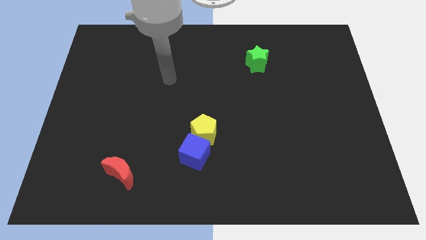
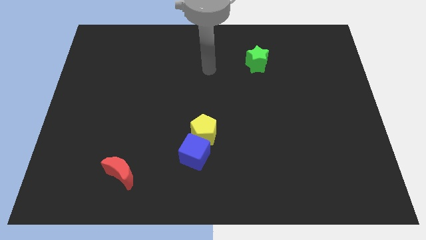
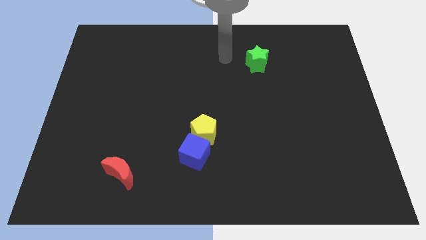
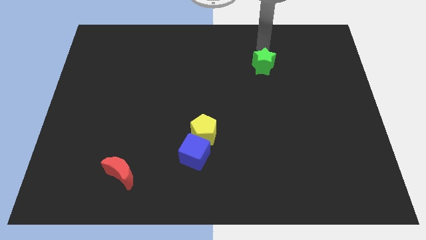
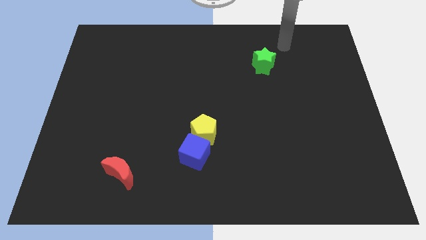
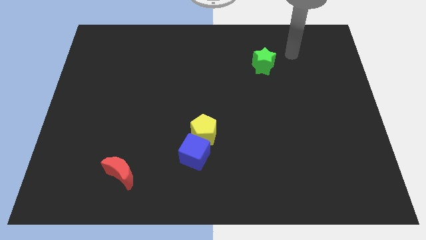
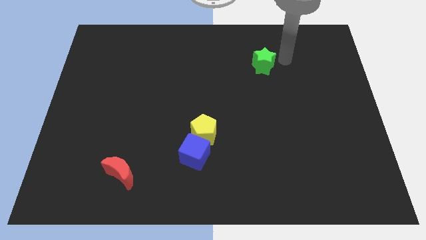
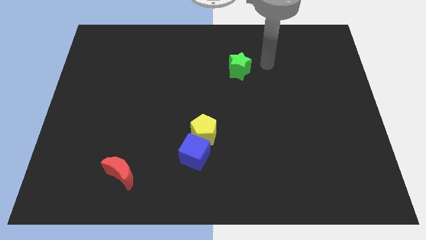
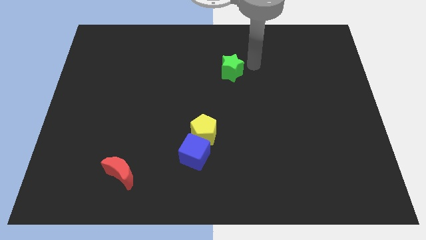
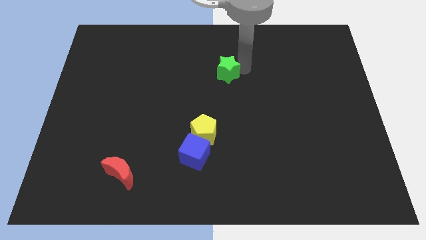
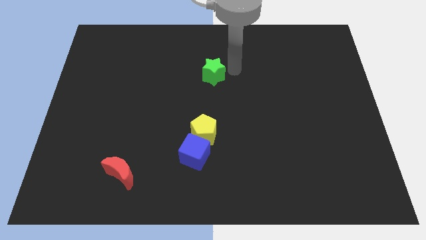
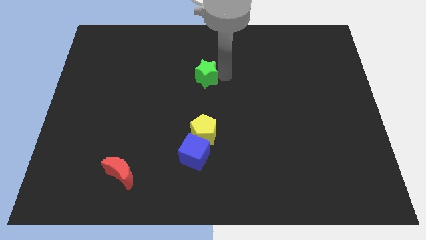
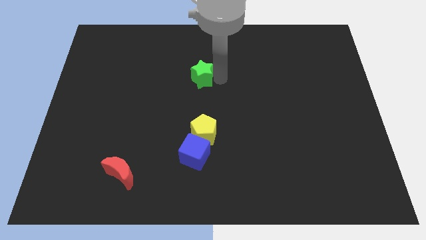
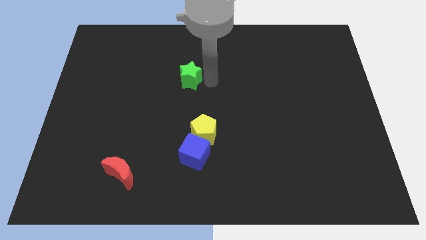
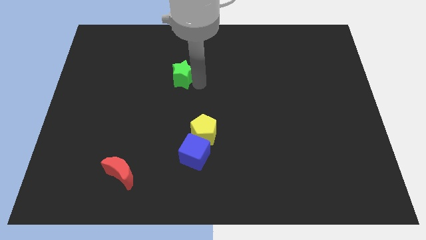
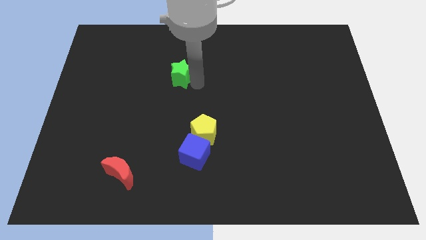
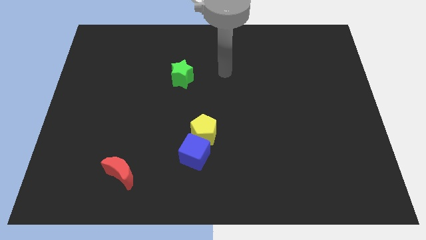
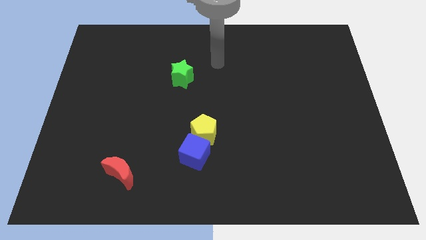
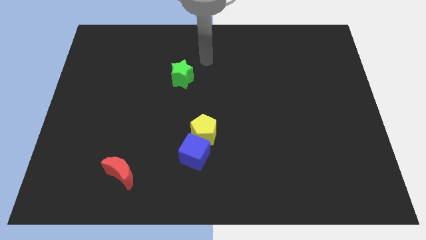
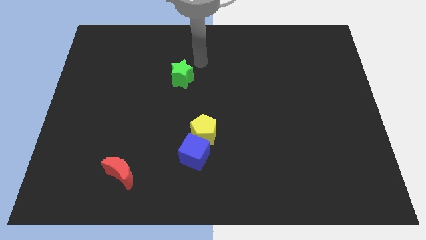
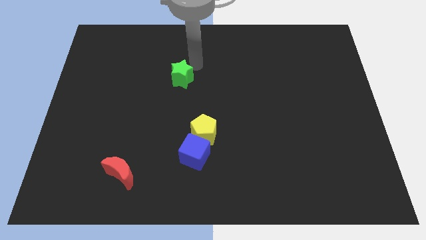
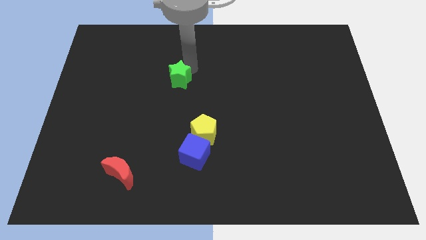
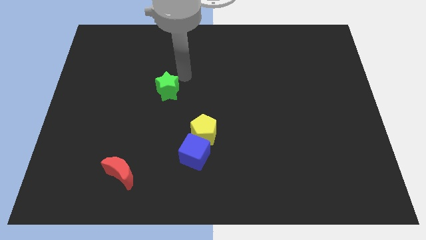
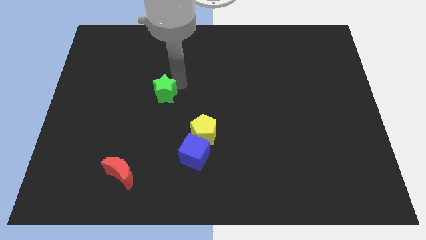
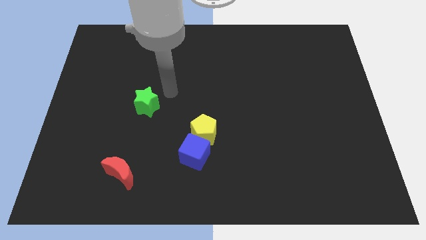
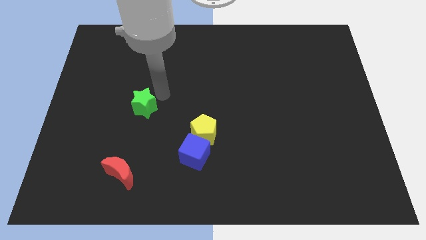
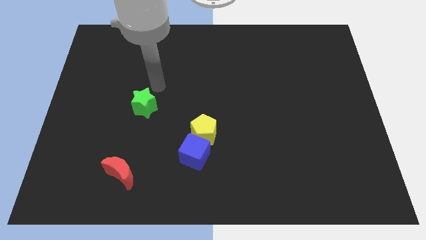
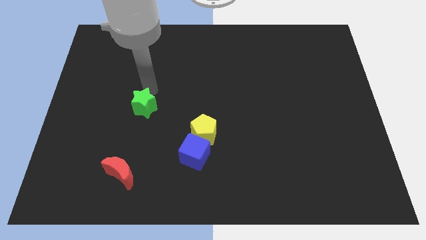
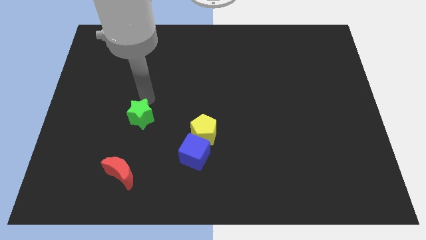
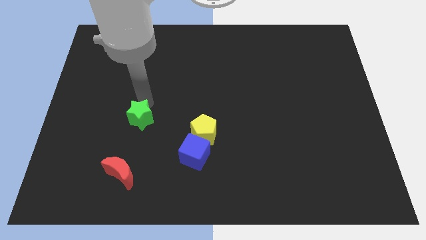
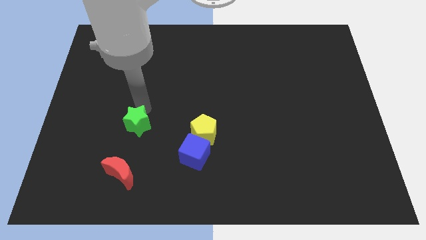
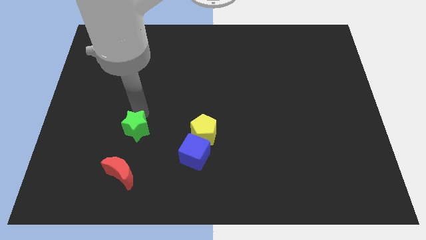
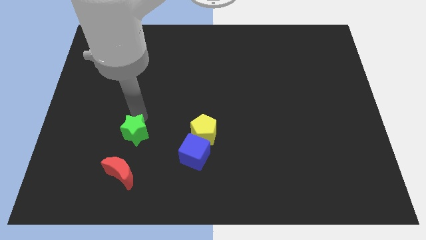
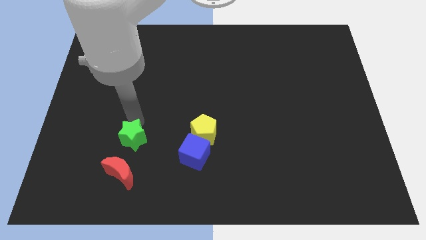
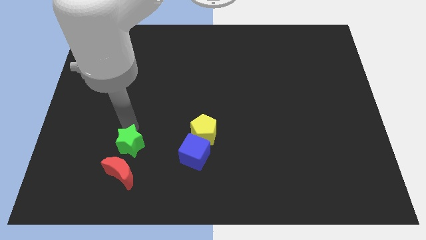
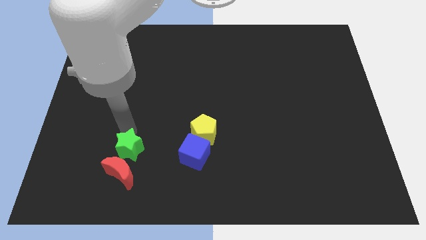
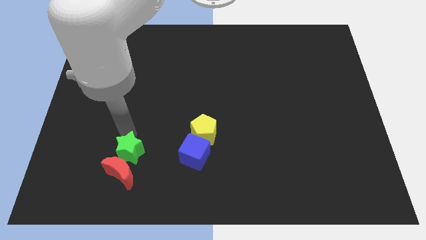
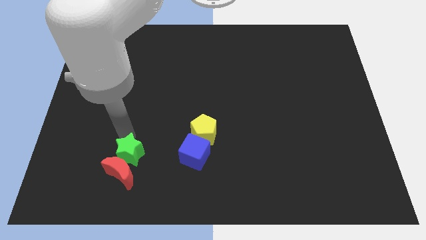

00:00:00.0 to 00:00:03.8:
push the green block towards the moon

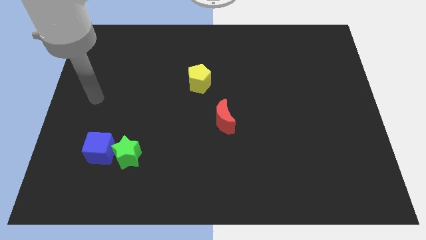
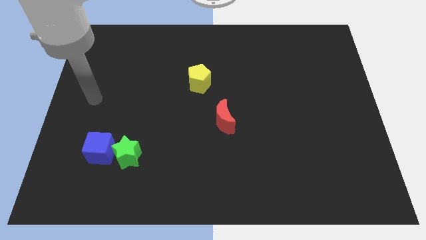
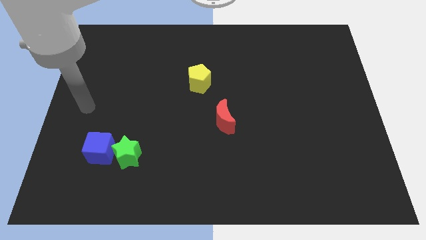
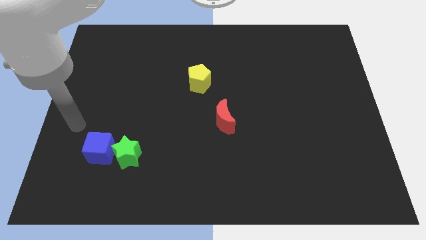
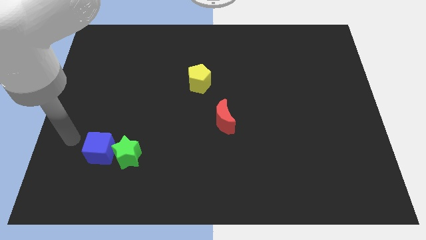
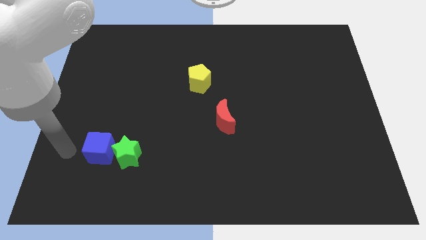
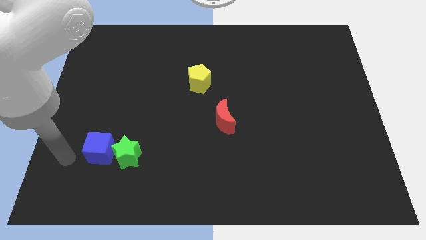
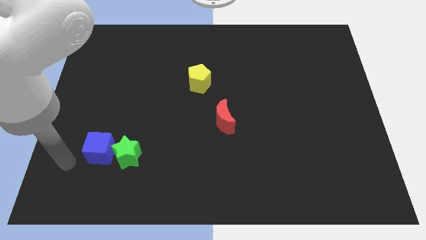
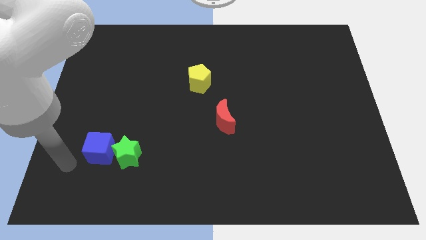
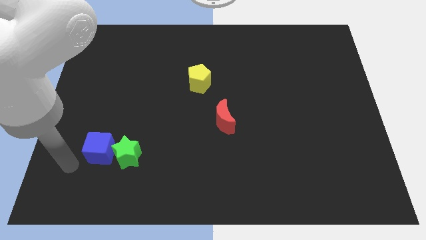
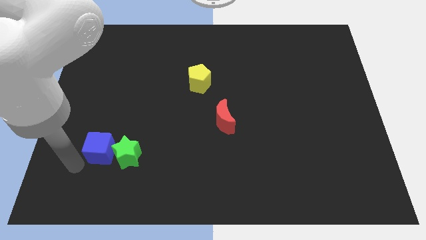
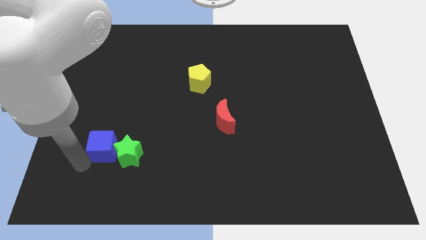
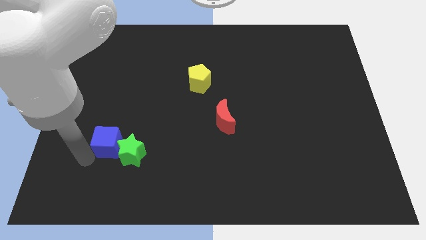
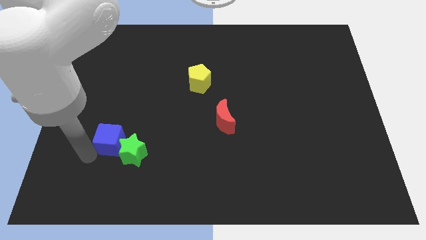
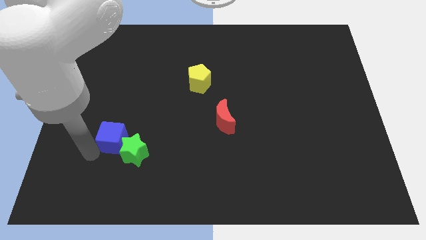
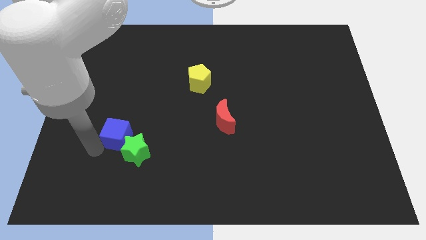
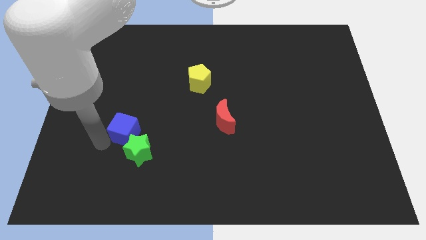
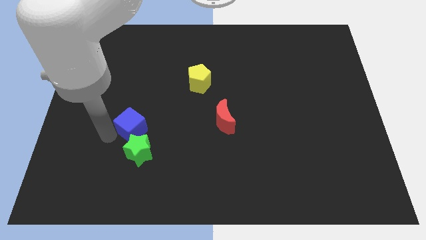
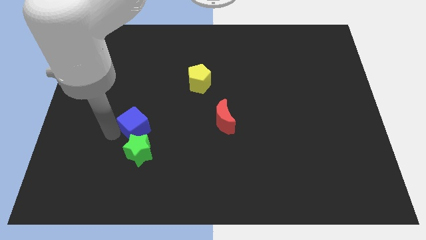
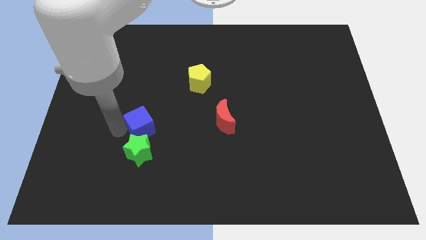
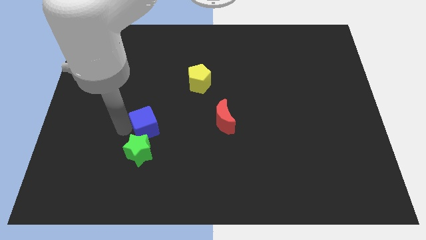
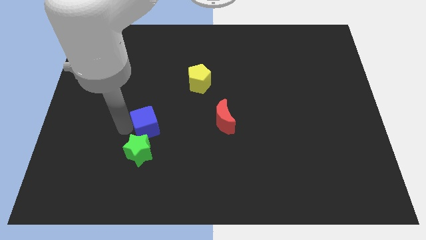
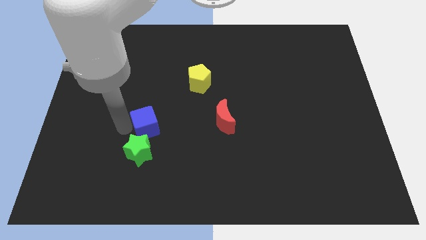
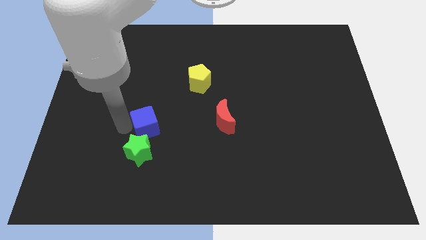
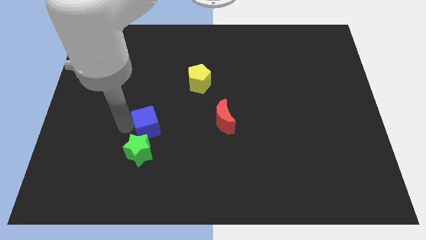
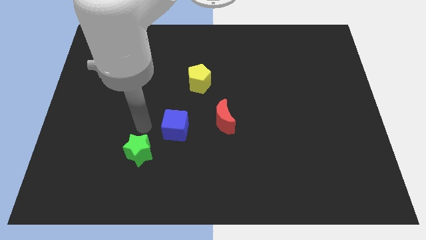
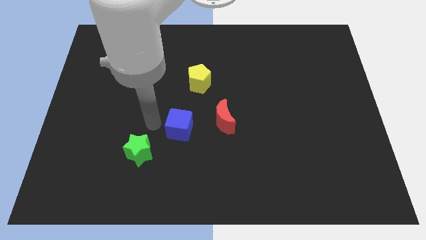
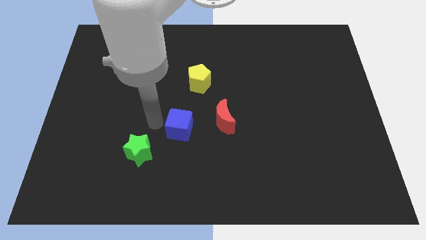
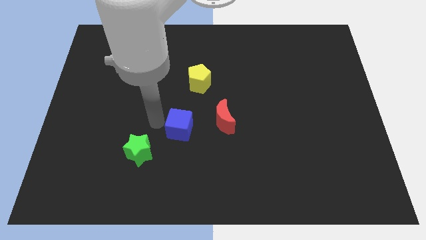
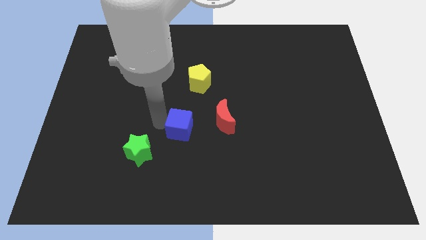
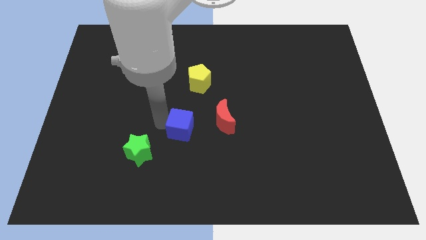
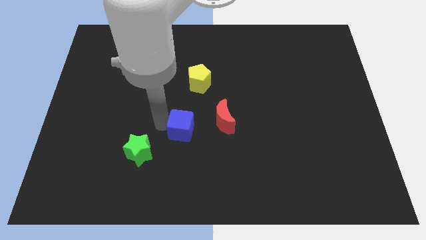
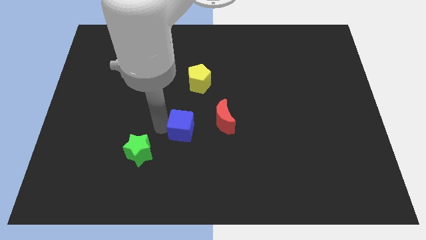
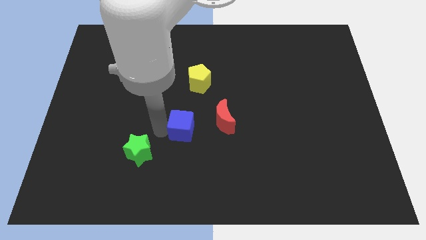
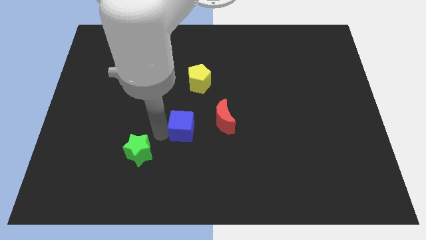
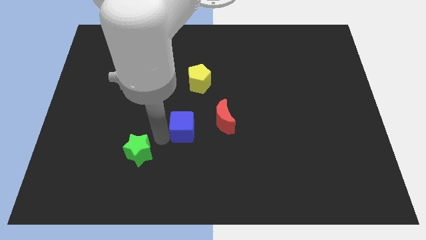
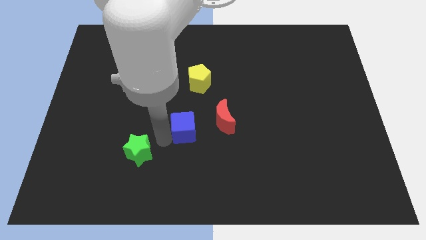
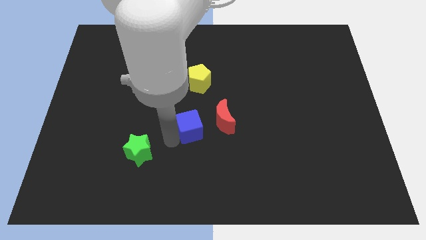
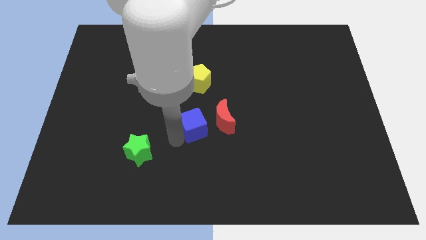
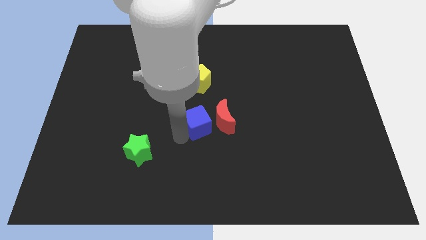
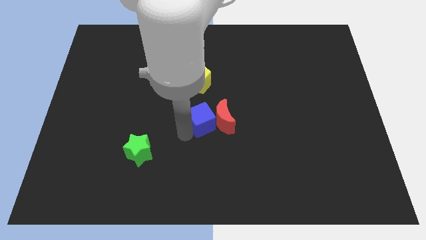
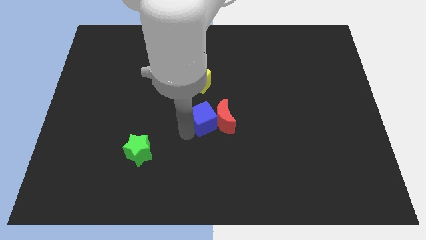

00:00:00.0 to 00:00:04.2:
push the blue block next to the red moon
